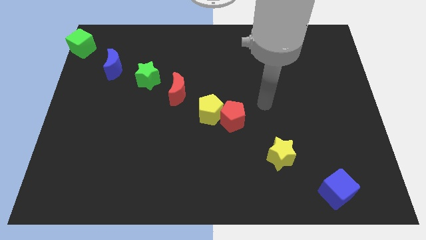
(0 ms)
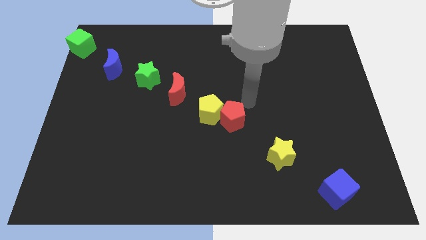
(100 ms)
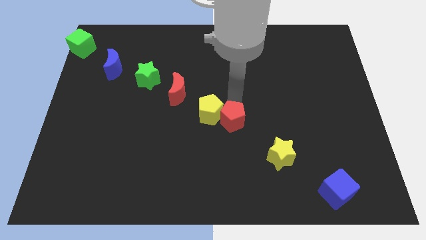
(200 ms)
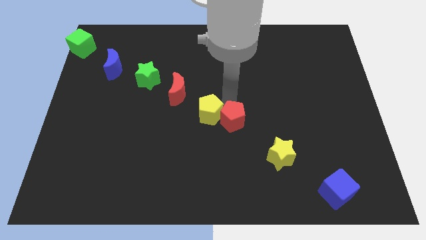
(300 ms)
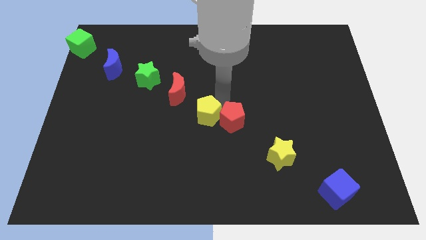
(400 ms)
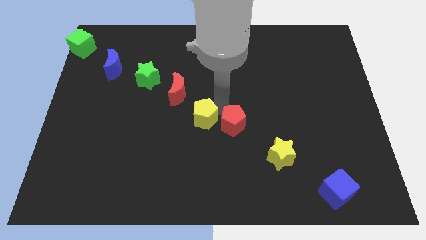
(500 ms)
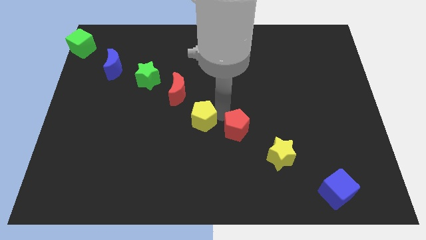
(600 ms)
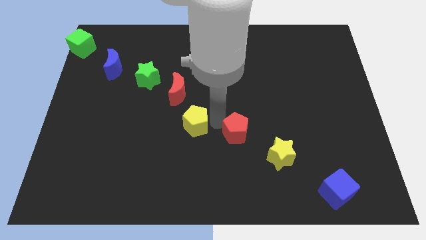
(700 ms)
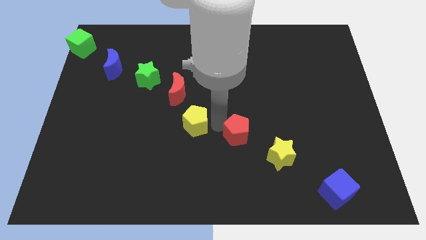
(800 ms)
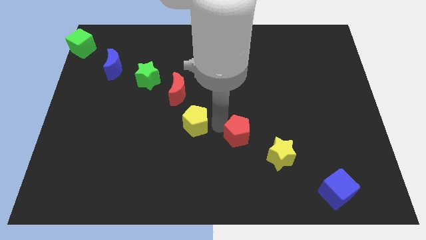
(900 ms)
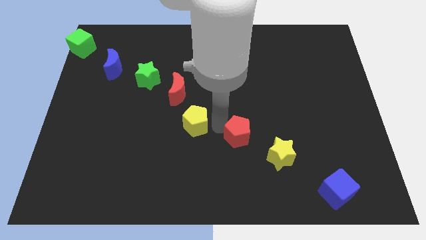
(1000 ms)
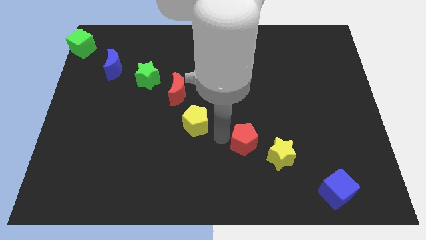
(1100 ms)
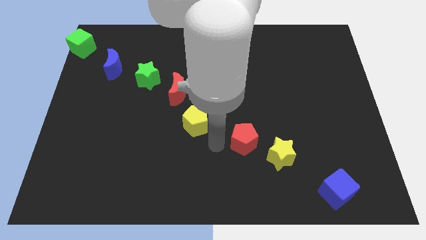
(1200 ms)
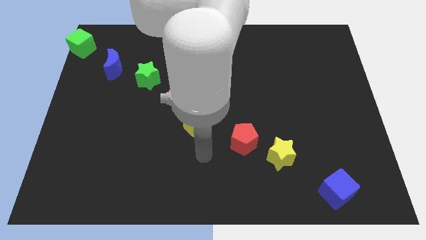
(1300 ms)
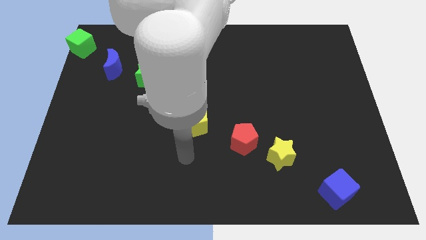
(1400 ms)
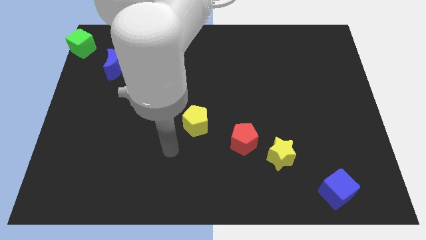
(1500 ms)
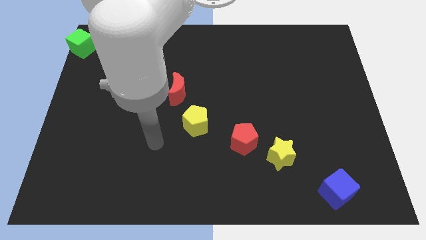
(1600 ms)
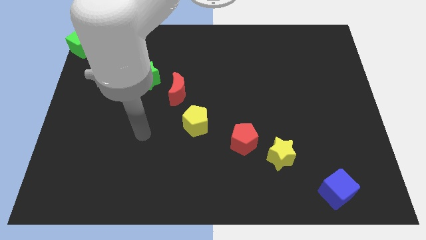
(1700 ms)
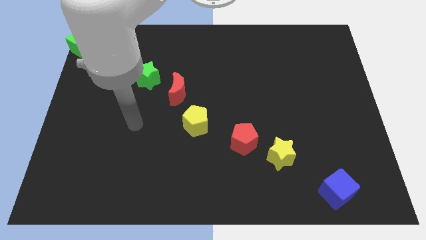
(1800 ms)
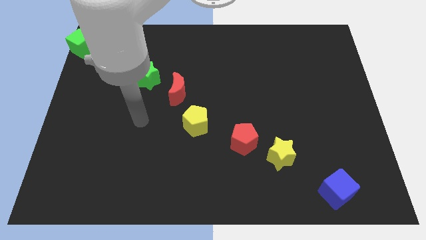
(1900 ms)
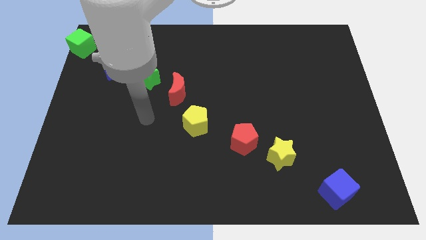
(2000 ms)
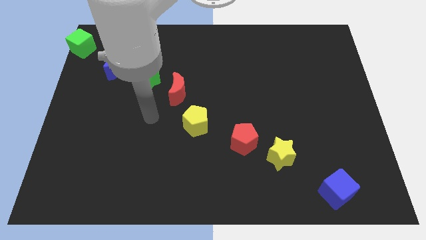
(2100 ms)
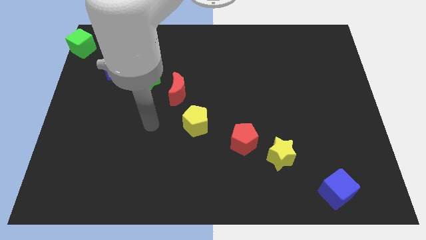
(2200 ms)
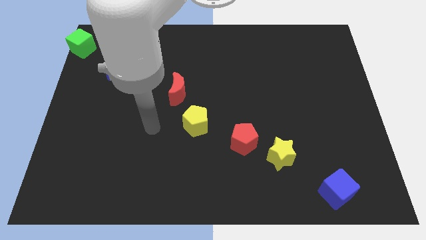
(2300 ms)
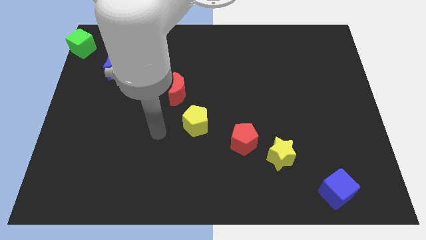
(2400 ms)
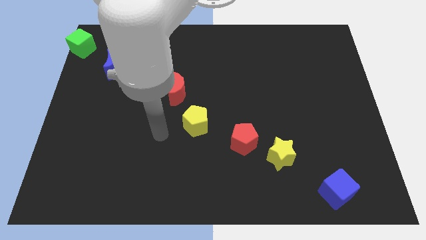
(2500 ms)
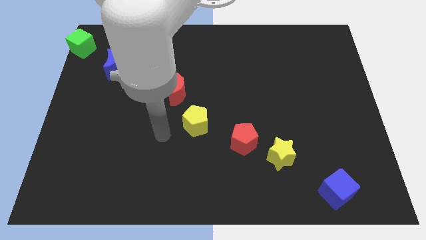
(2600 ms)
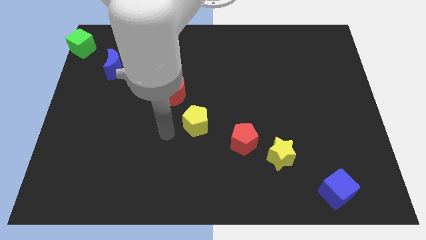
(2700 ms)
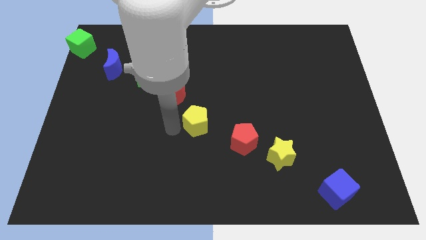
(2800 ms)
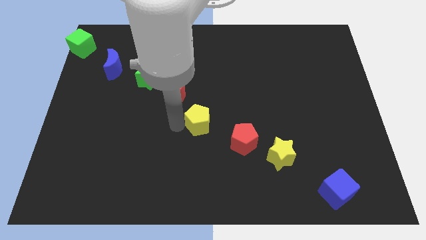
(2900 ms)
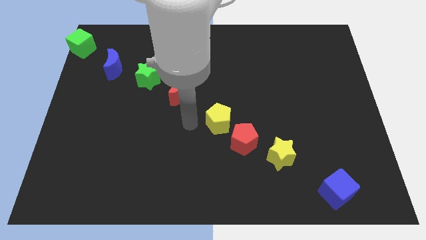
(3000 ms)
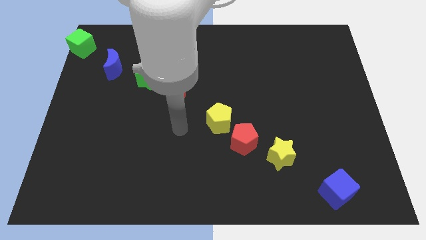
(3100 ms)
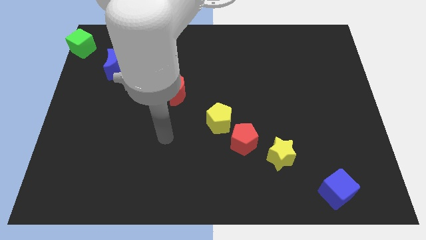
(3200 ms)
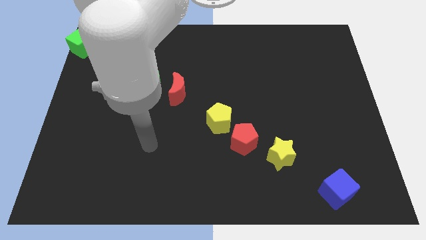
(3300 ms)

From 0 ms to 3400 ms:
separate the yellow and red penatgon

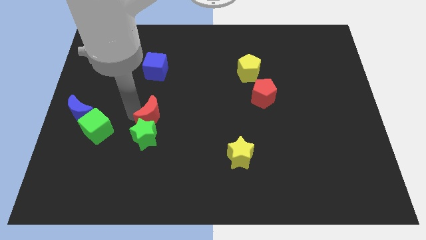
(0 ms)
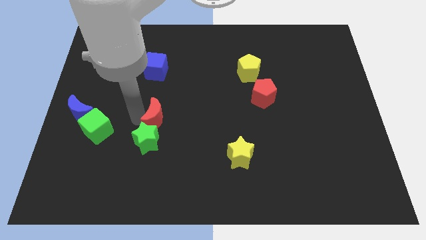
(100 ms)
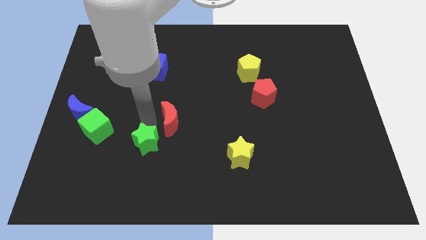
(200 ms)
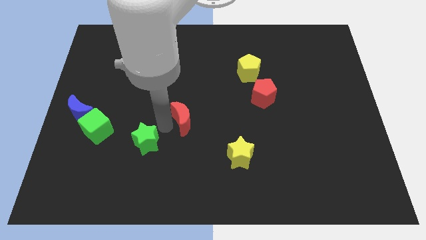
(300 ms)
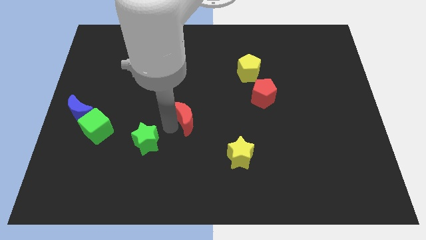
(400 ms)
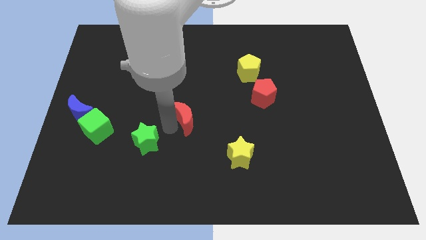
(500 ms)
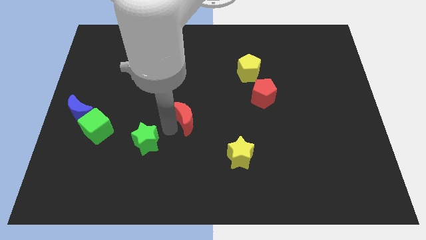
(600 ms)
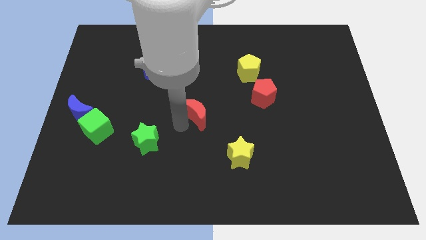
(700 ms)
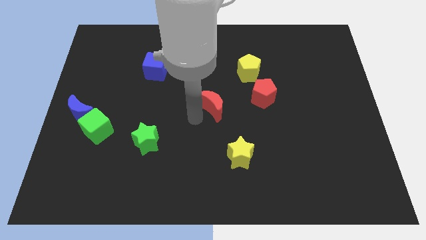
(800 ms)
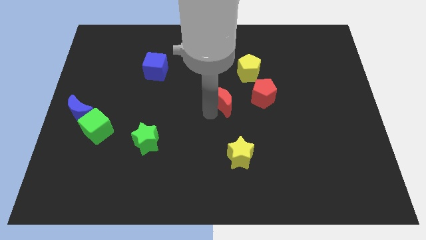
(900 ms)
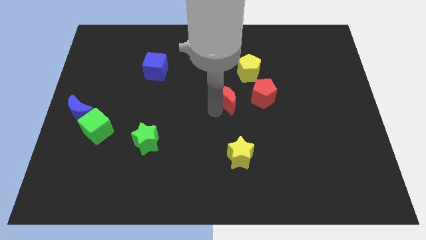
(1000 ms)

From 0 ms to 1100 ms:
separate the red crescent and green star

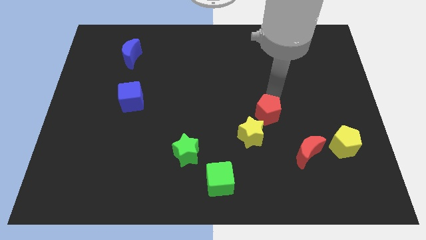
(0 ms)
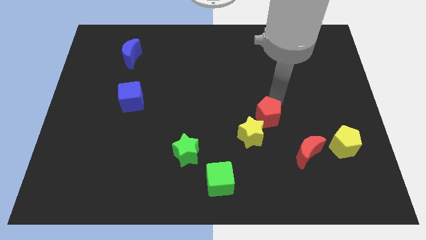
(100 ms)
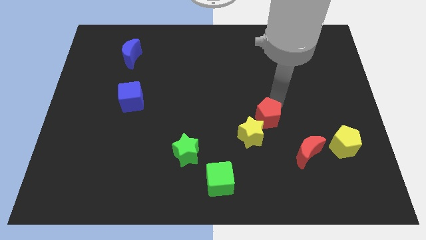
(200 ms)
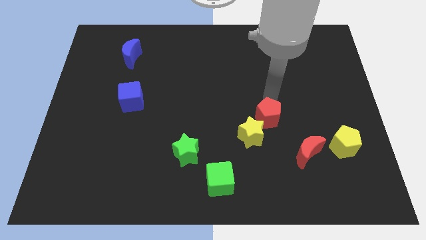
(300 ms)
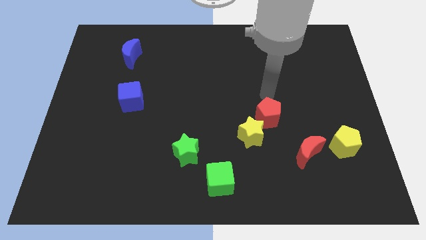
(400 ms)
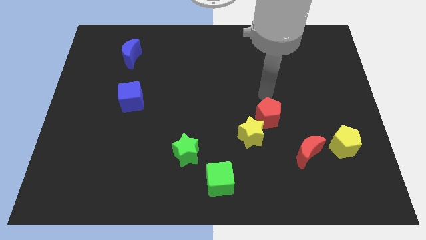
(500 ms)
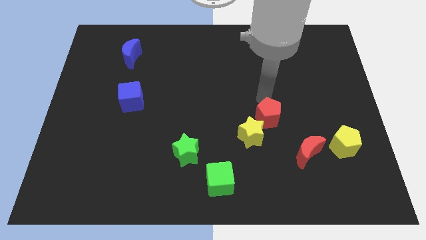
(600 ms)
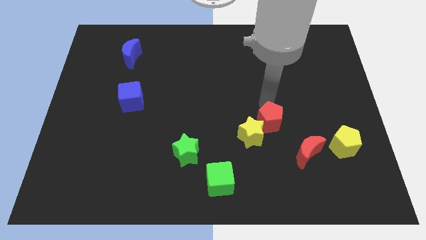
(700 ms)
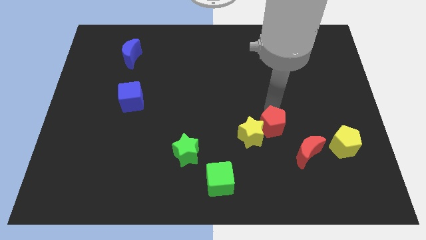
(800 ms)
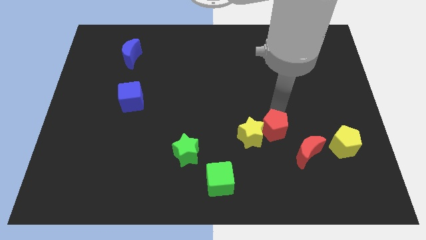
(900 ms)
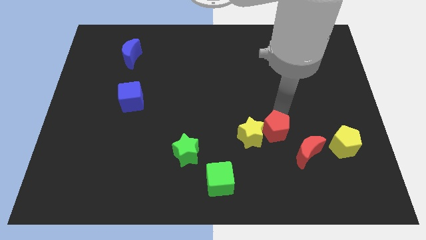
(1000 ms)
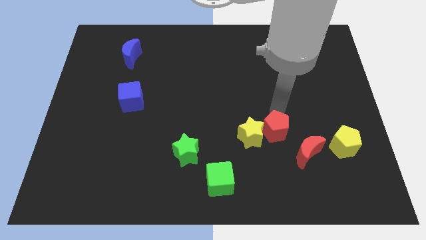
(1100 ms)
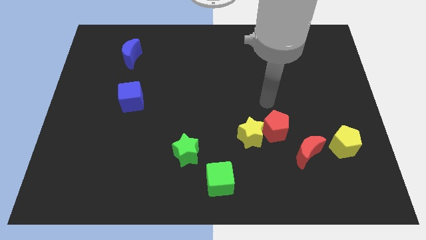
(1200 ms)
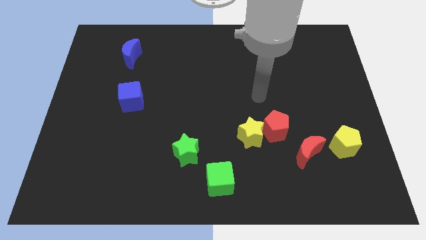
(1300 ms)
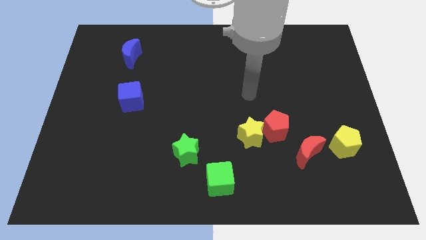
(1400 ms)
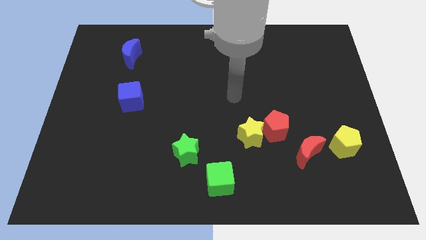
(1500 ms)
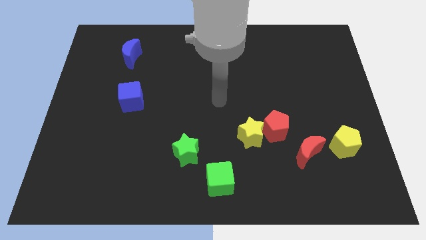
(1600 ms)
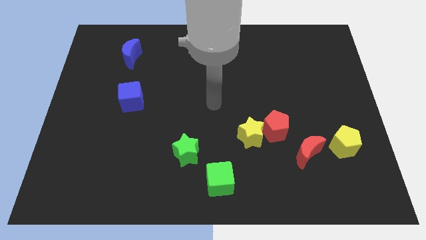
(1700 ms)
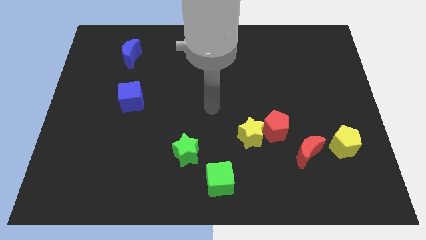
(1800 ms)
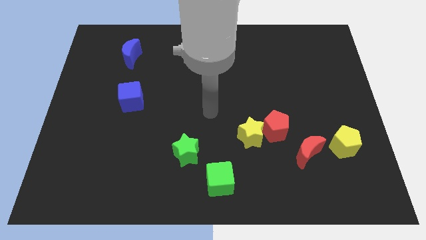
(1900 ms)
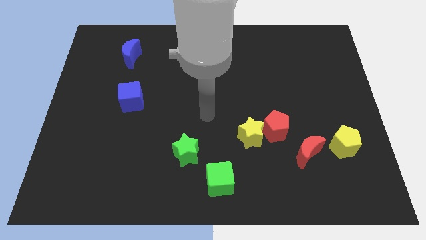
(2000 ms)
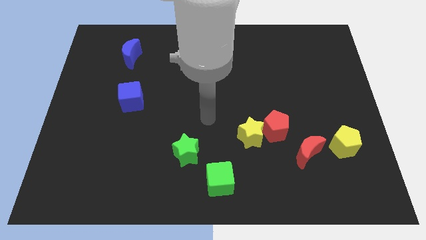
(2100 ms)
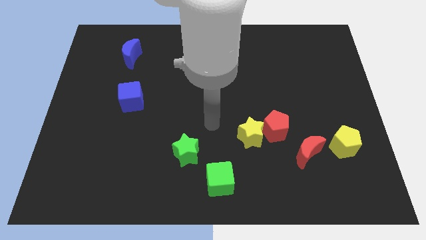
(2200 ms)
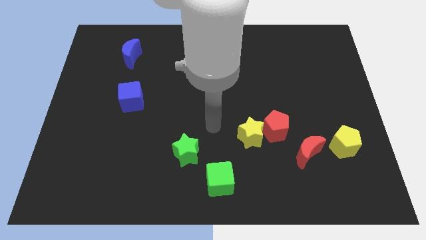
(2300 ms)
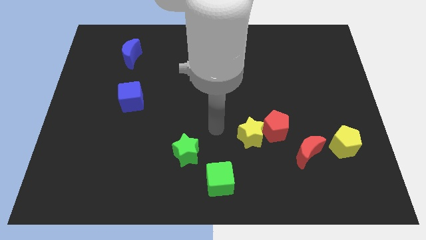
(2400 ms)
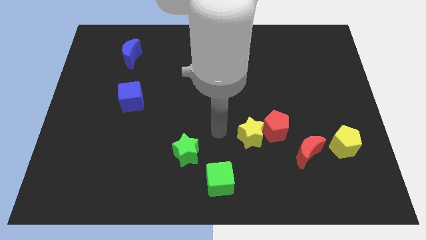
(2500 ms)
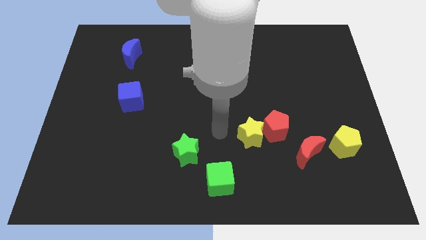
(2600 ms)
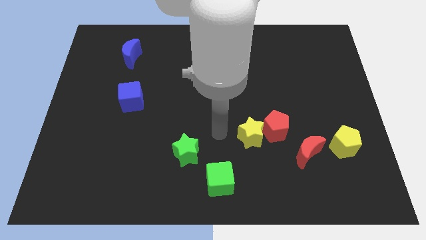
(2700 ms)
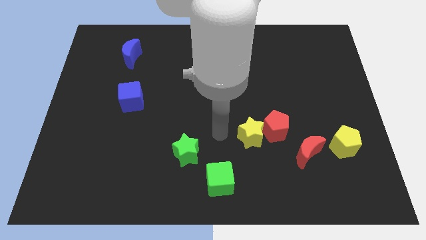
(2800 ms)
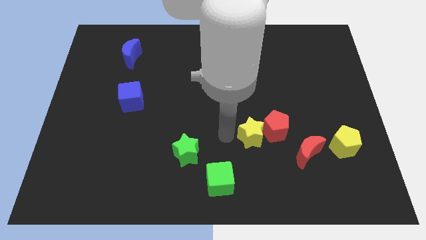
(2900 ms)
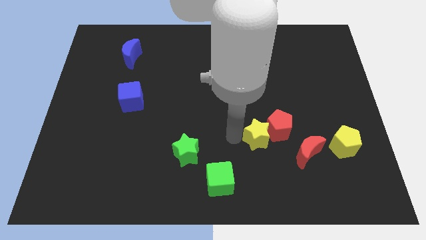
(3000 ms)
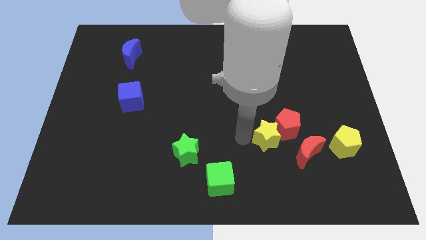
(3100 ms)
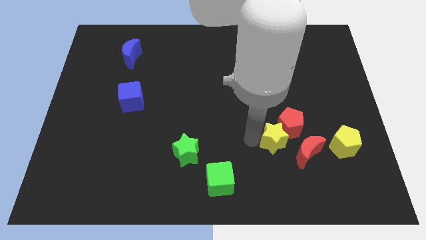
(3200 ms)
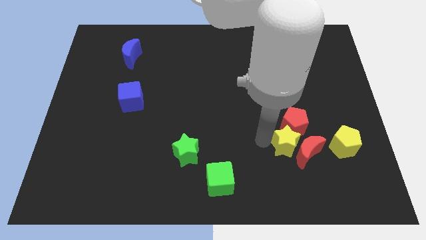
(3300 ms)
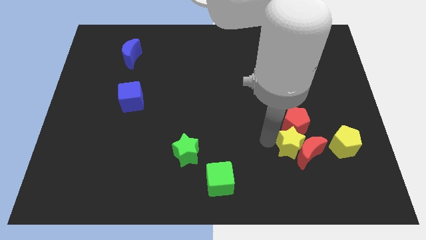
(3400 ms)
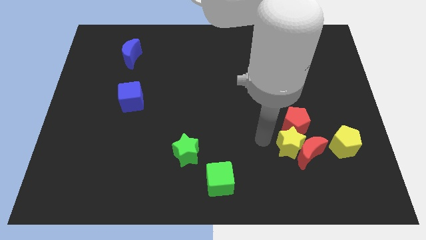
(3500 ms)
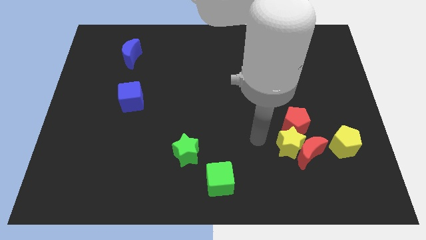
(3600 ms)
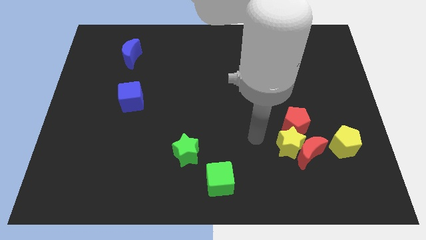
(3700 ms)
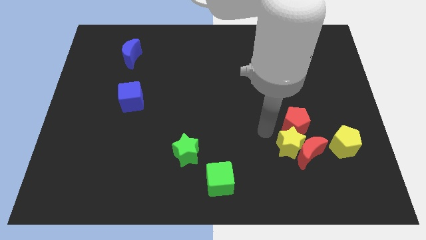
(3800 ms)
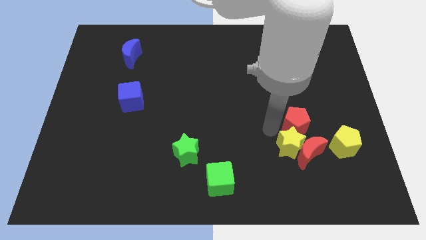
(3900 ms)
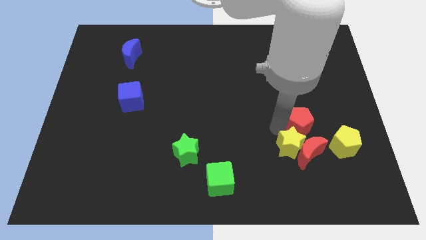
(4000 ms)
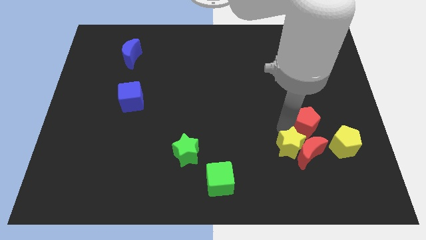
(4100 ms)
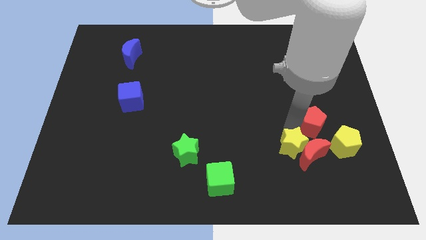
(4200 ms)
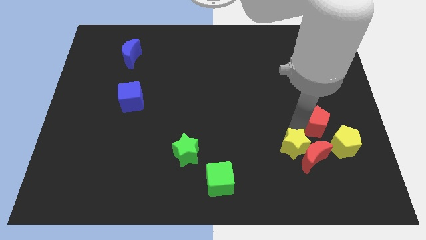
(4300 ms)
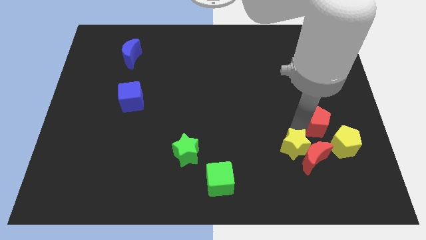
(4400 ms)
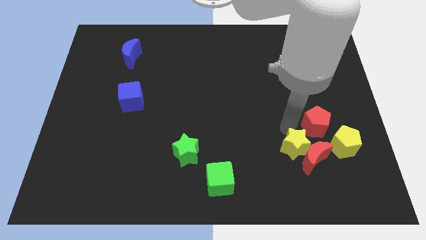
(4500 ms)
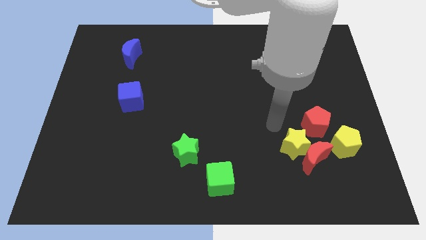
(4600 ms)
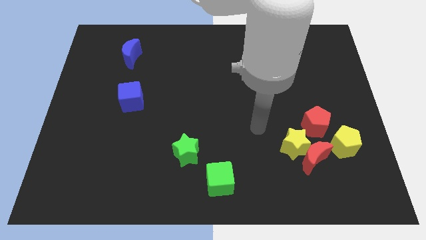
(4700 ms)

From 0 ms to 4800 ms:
move the yellow star into the red moon
